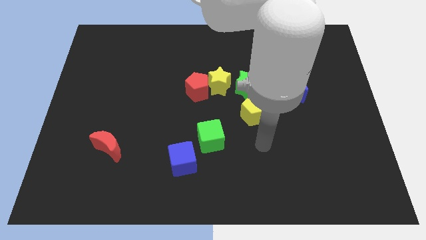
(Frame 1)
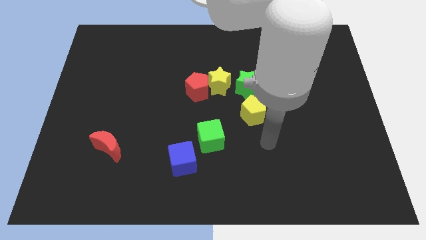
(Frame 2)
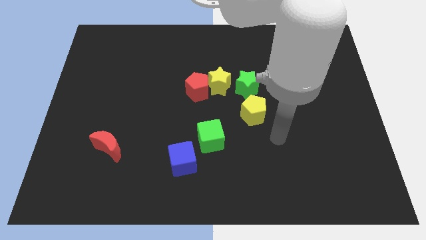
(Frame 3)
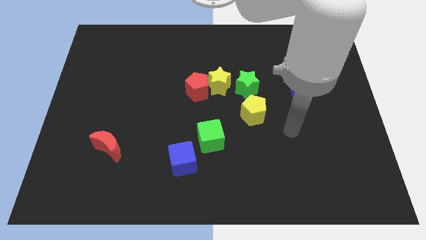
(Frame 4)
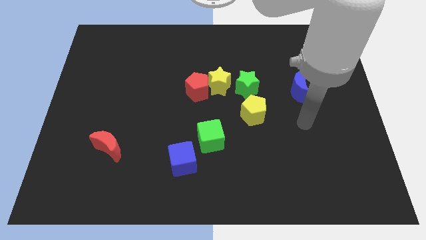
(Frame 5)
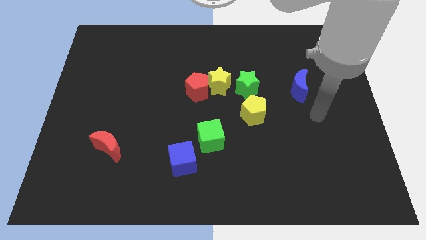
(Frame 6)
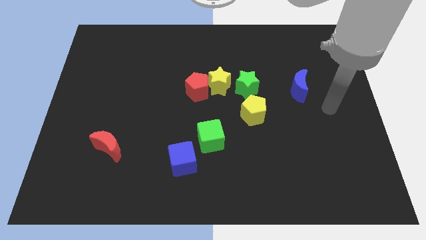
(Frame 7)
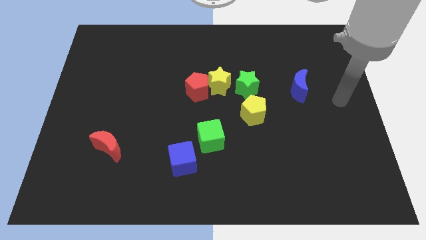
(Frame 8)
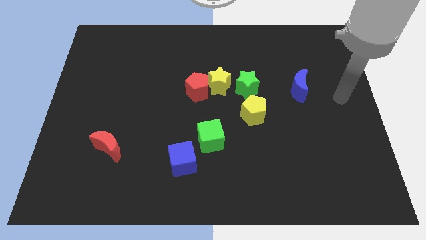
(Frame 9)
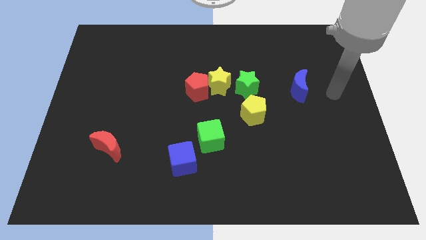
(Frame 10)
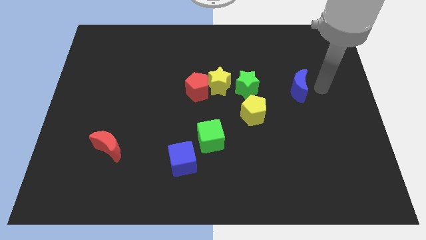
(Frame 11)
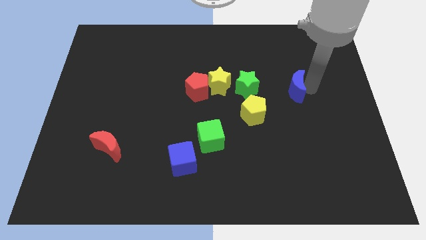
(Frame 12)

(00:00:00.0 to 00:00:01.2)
point your arm to the right of the blue moon

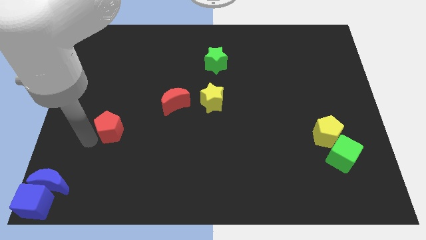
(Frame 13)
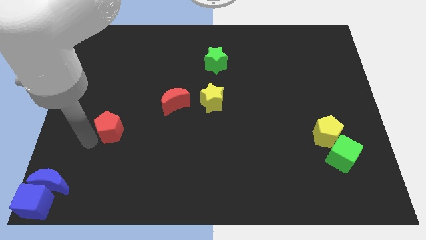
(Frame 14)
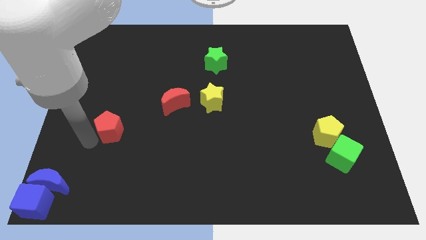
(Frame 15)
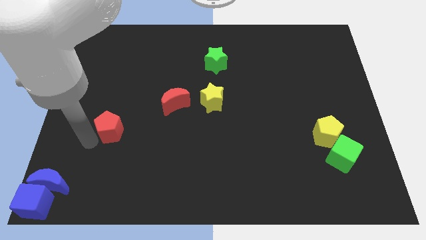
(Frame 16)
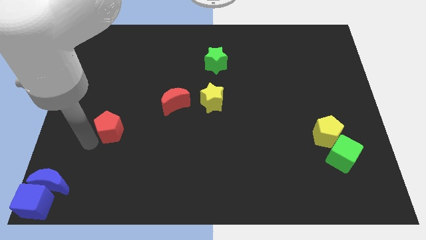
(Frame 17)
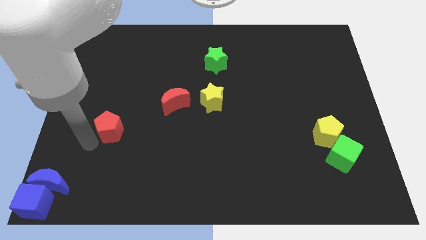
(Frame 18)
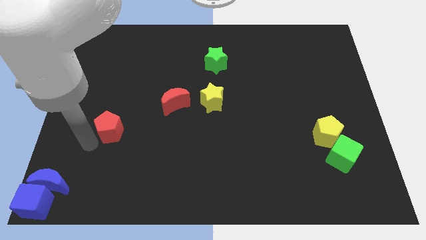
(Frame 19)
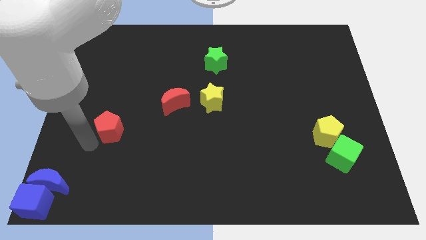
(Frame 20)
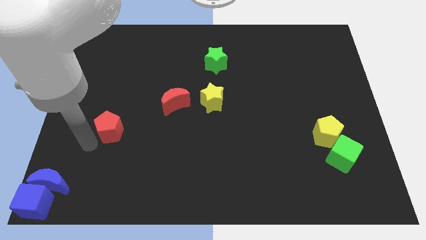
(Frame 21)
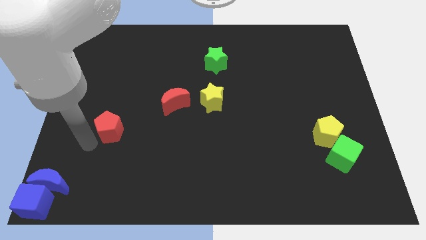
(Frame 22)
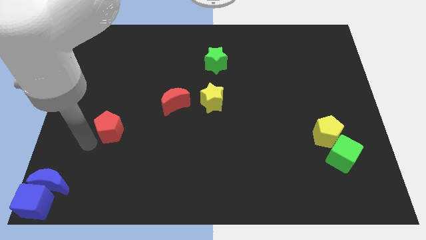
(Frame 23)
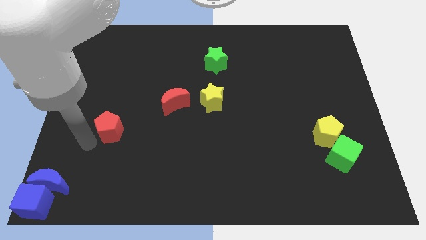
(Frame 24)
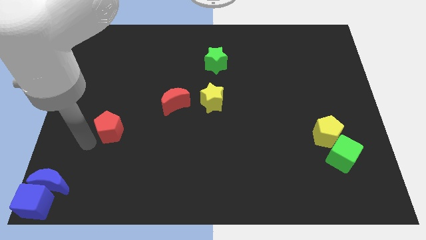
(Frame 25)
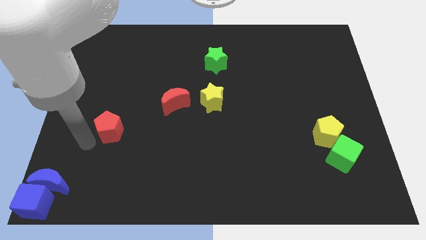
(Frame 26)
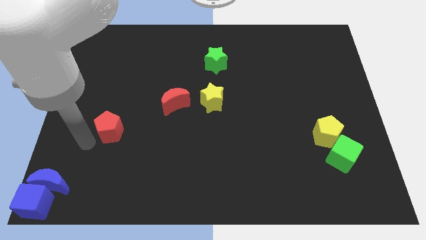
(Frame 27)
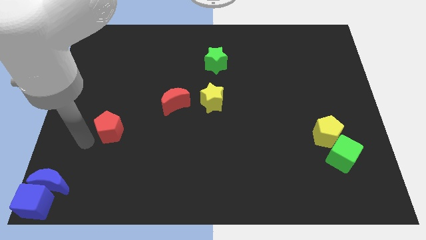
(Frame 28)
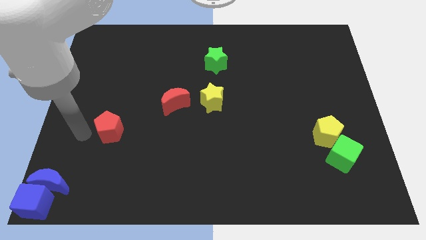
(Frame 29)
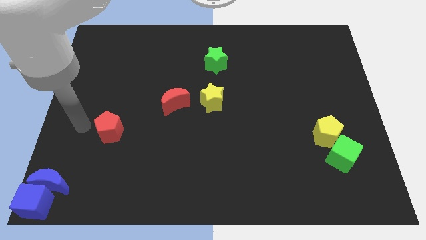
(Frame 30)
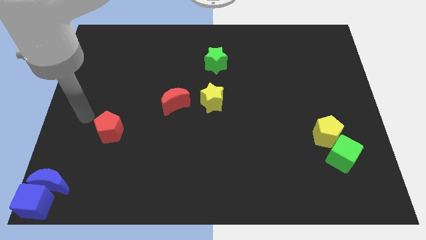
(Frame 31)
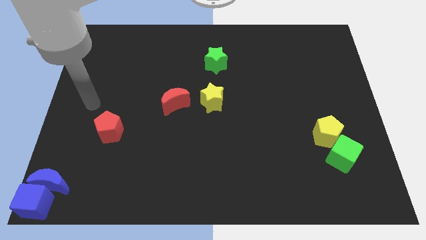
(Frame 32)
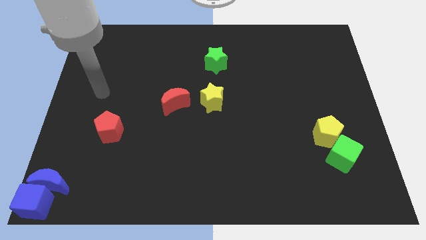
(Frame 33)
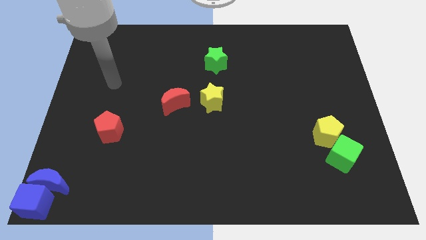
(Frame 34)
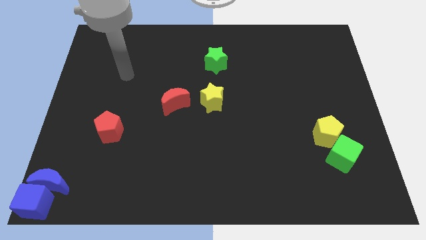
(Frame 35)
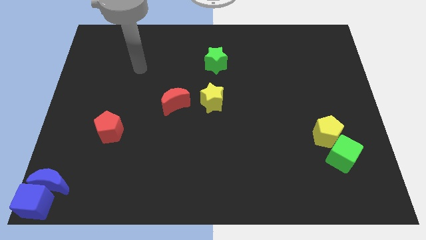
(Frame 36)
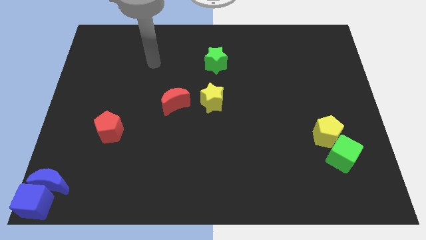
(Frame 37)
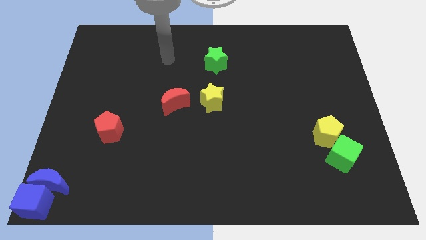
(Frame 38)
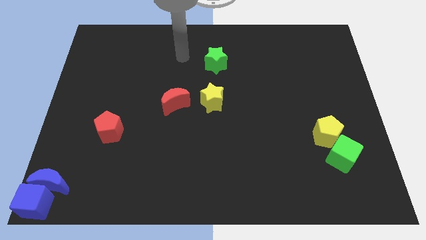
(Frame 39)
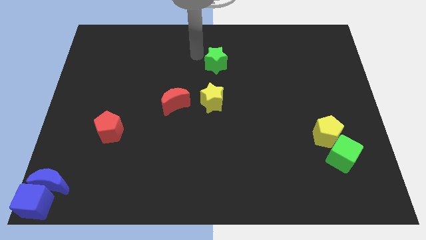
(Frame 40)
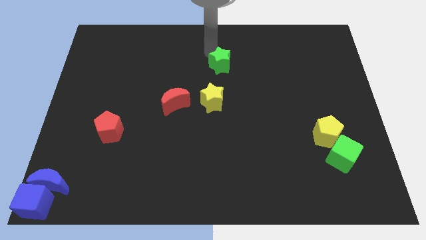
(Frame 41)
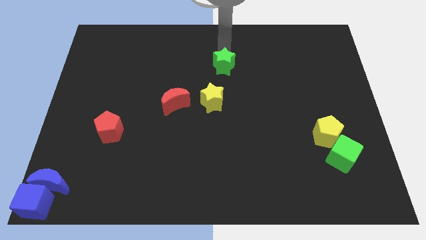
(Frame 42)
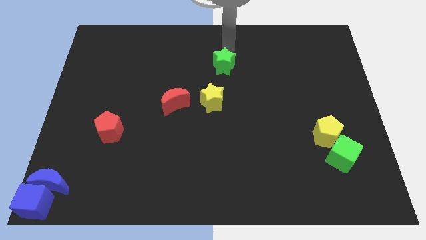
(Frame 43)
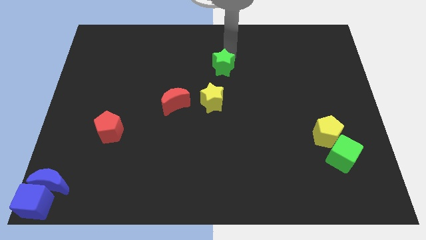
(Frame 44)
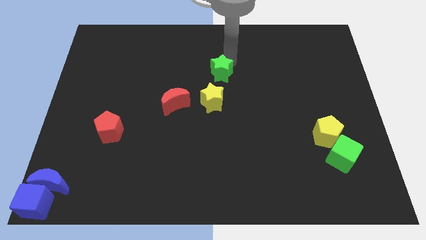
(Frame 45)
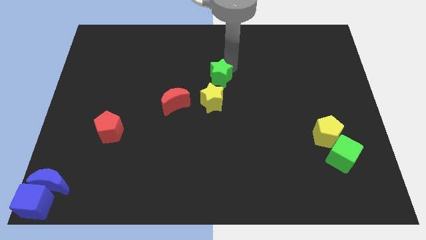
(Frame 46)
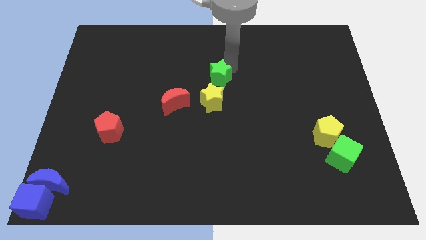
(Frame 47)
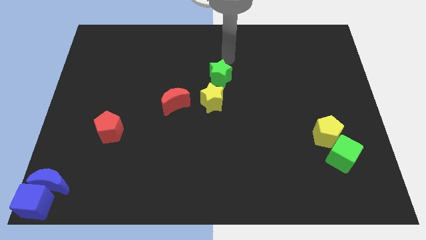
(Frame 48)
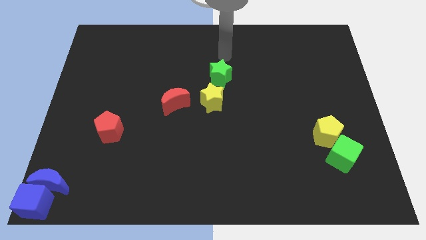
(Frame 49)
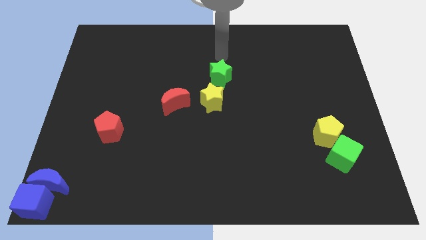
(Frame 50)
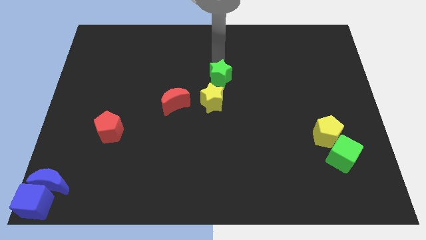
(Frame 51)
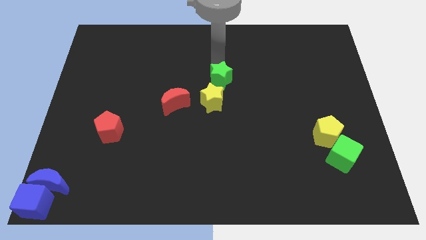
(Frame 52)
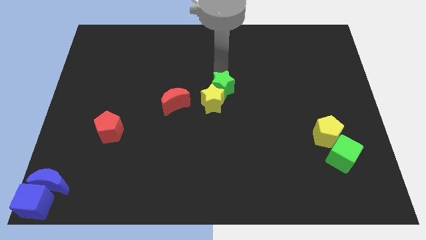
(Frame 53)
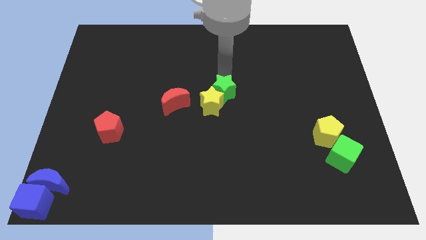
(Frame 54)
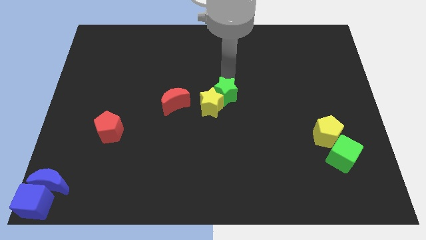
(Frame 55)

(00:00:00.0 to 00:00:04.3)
move the green star to the top right side of the yellow star

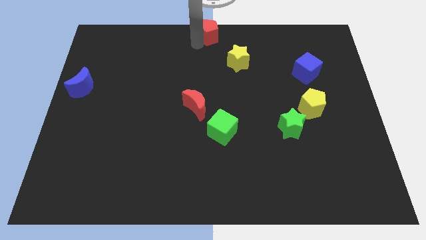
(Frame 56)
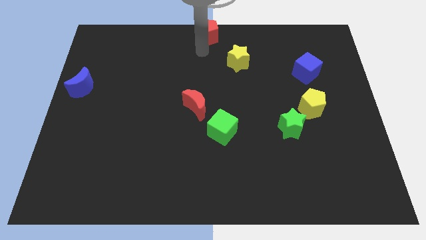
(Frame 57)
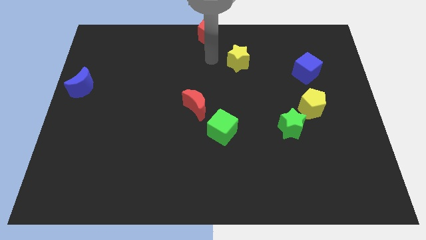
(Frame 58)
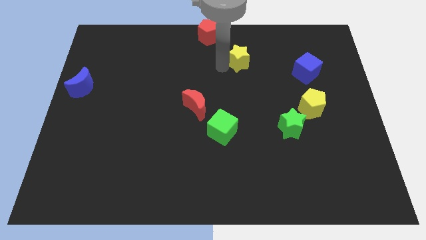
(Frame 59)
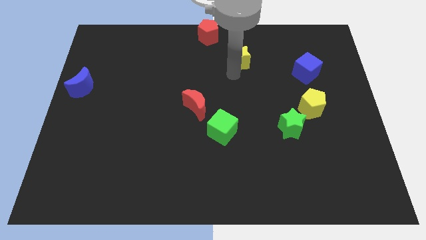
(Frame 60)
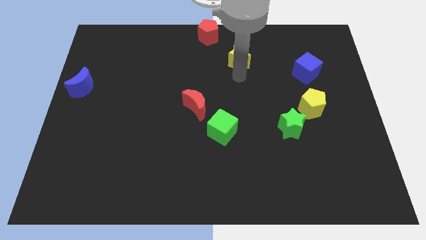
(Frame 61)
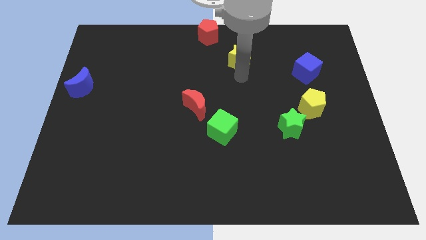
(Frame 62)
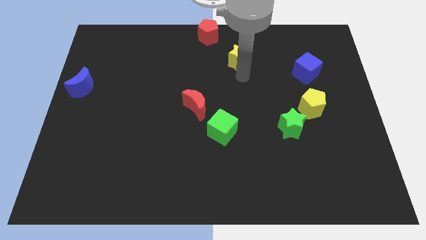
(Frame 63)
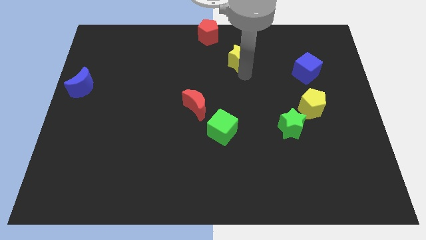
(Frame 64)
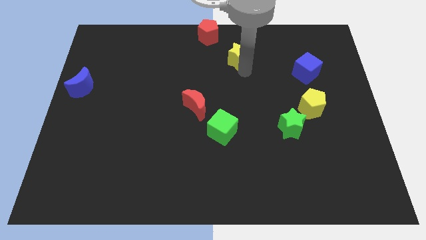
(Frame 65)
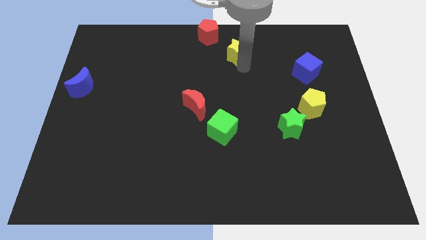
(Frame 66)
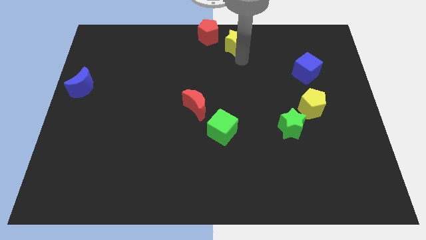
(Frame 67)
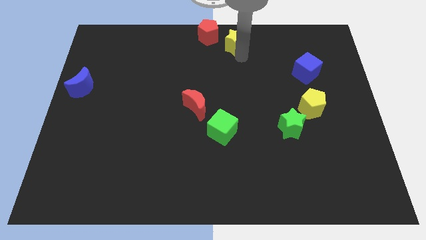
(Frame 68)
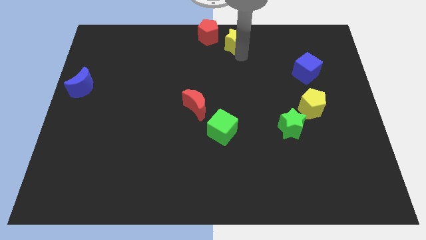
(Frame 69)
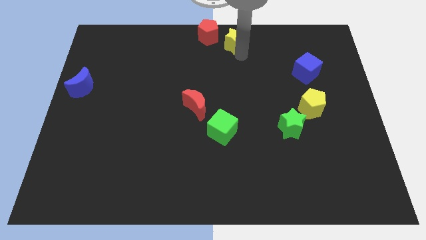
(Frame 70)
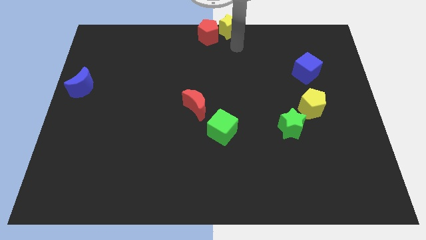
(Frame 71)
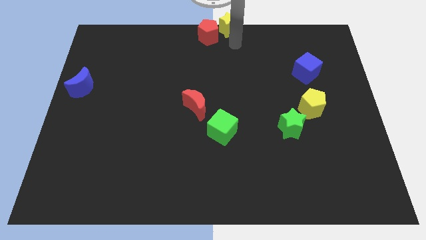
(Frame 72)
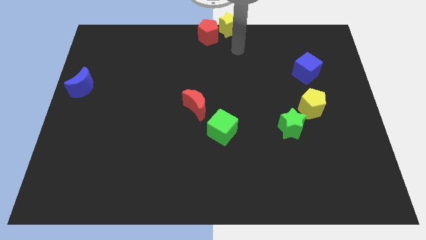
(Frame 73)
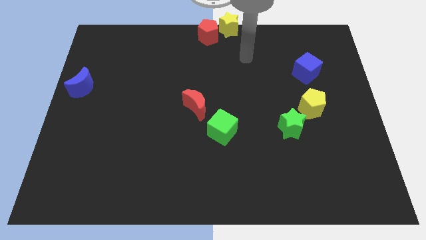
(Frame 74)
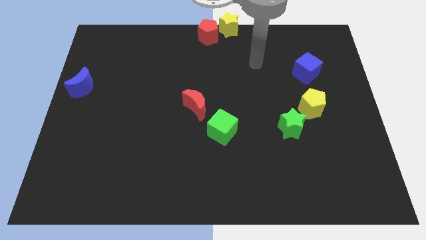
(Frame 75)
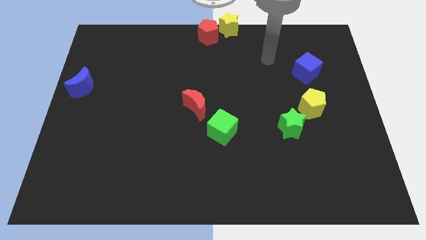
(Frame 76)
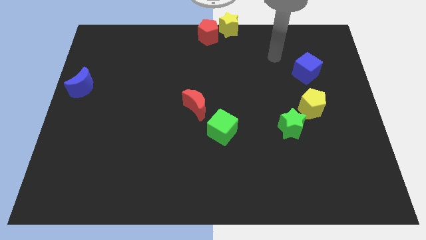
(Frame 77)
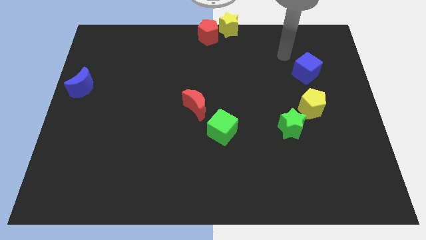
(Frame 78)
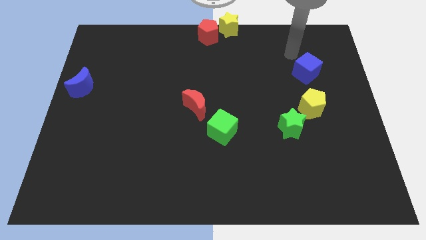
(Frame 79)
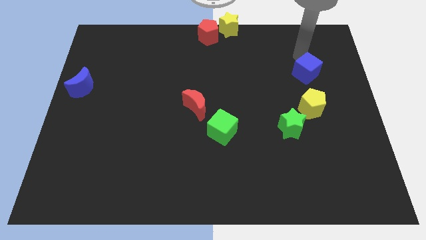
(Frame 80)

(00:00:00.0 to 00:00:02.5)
move the yellow star to the top center

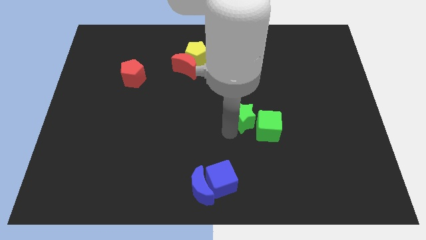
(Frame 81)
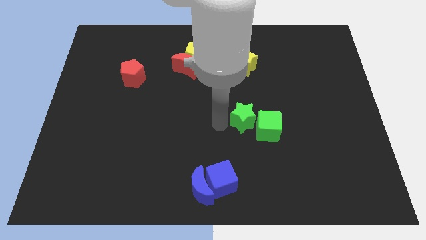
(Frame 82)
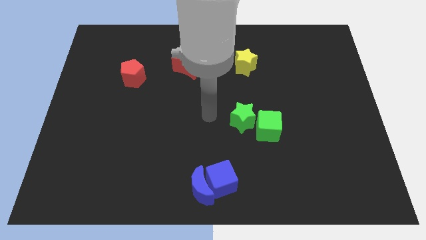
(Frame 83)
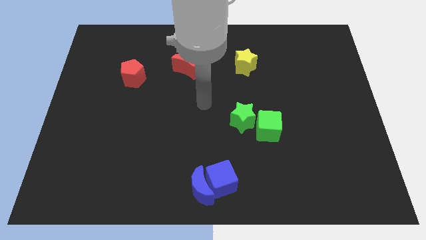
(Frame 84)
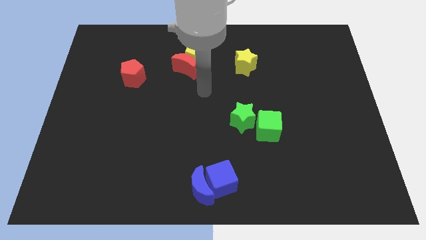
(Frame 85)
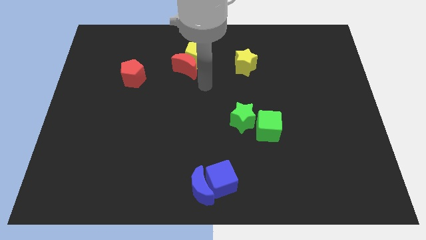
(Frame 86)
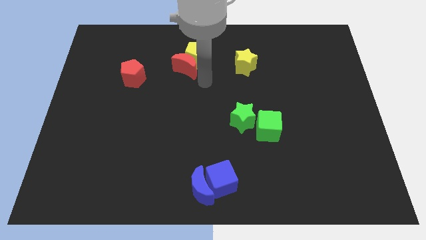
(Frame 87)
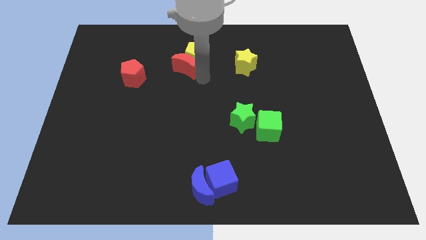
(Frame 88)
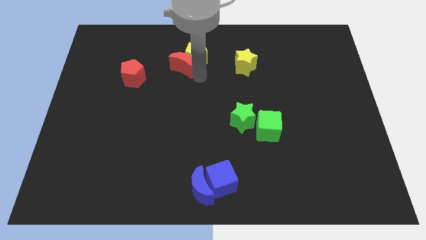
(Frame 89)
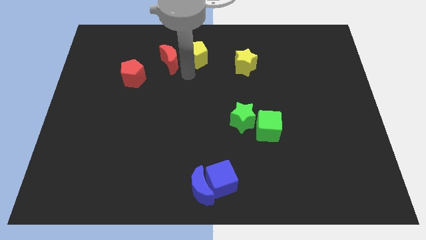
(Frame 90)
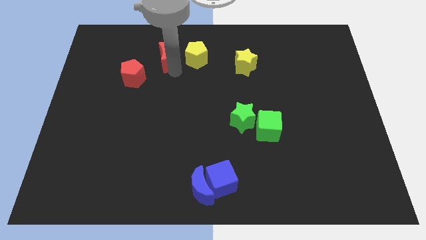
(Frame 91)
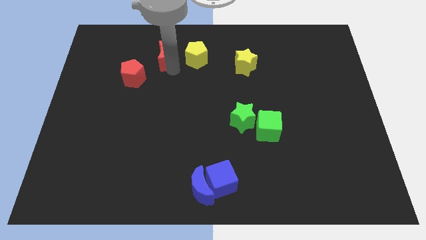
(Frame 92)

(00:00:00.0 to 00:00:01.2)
separate red moon from yellow pentagon
